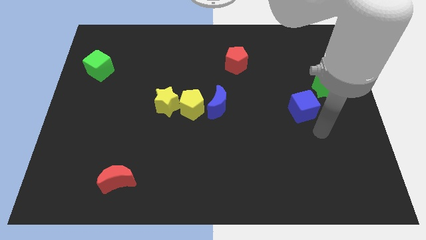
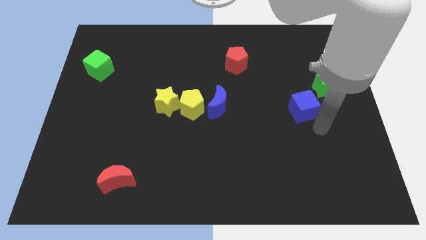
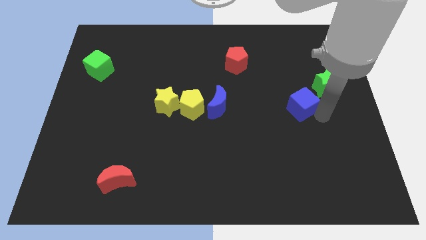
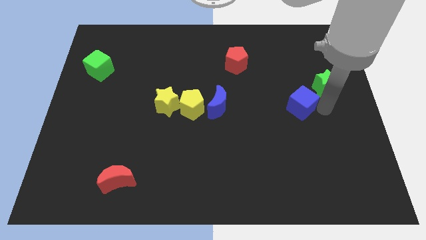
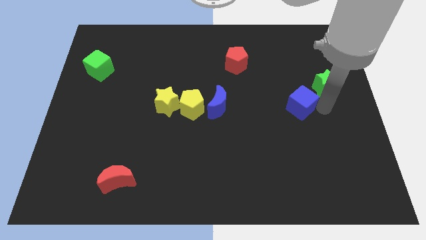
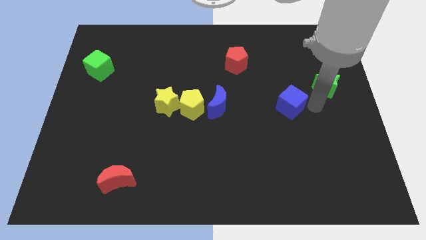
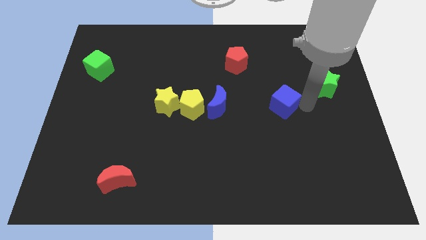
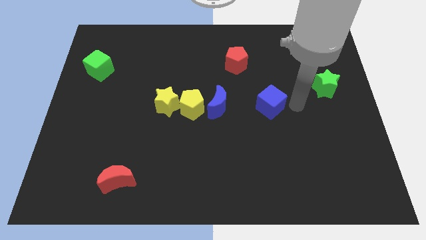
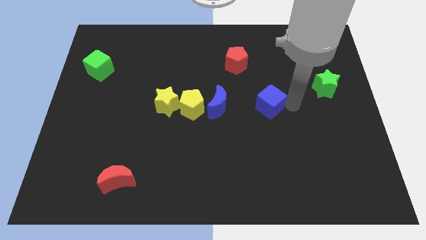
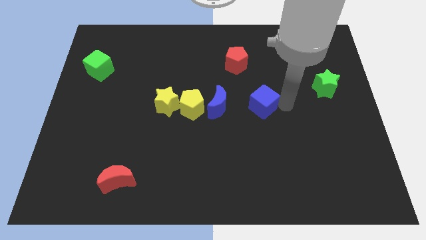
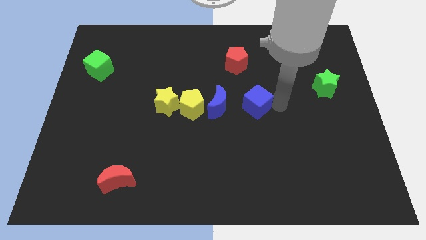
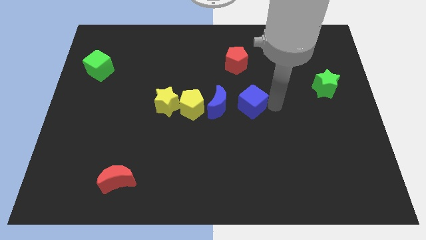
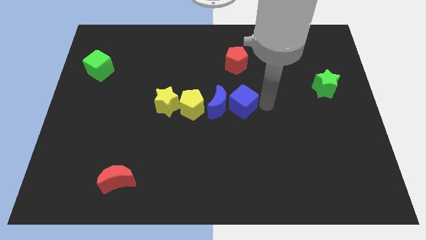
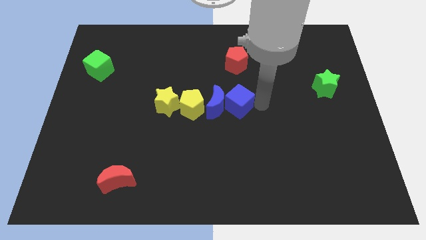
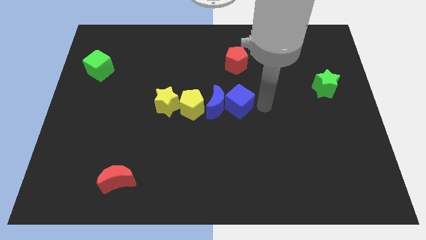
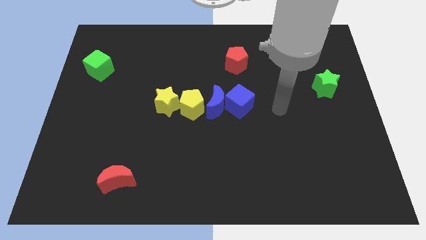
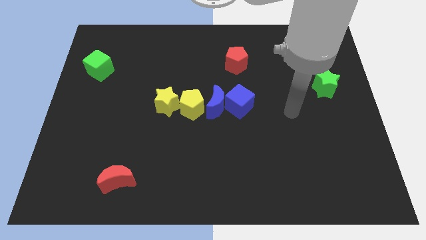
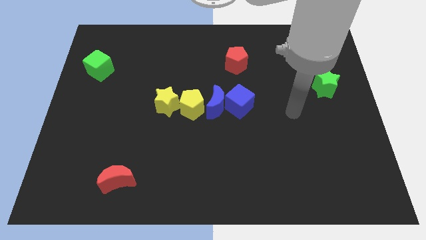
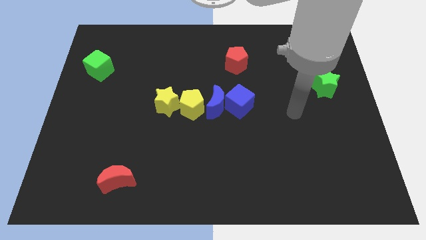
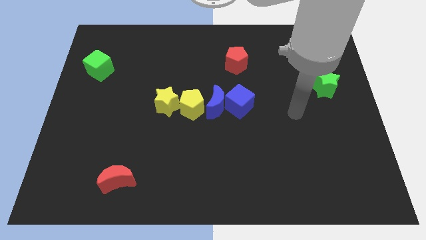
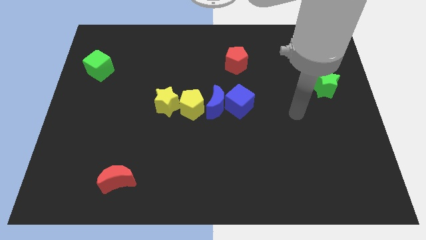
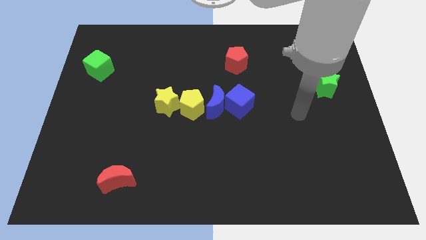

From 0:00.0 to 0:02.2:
push the blue cube into the blue crescent

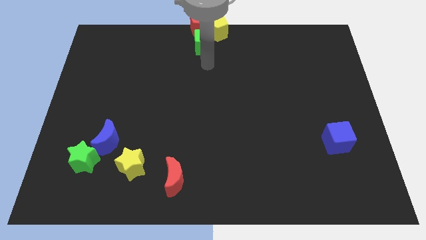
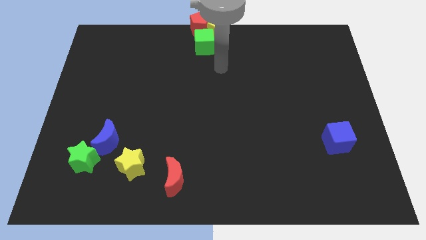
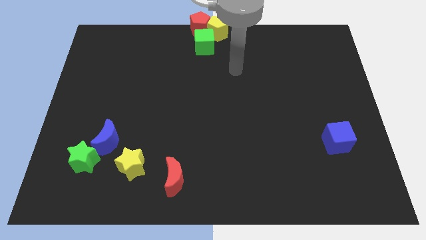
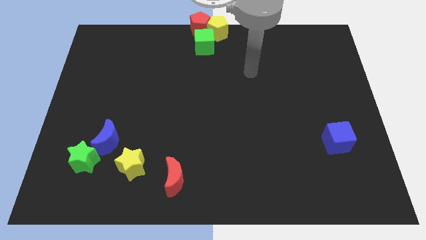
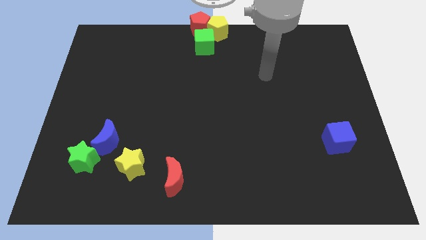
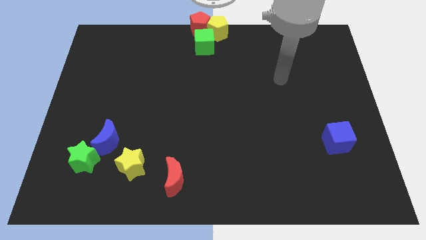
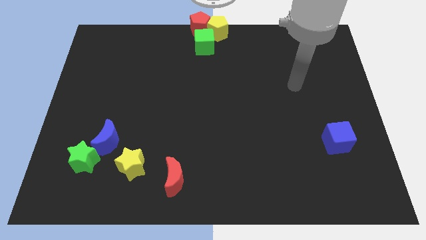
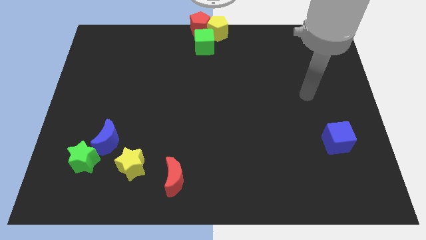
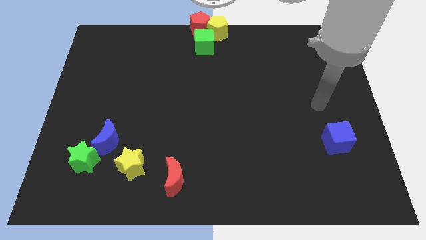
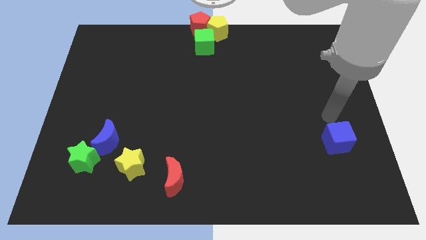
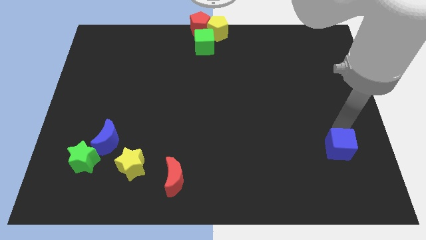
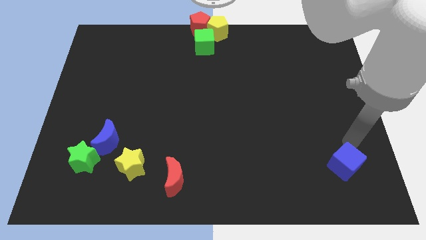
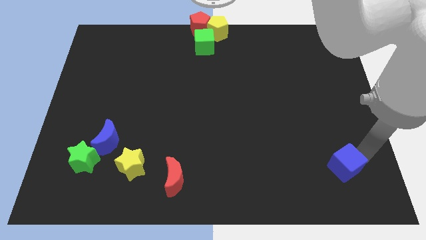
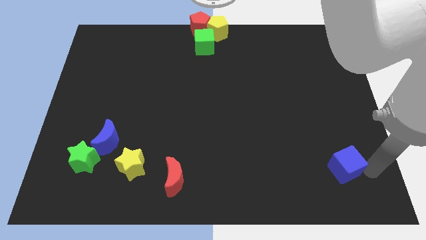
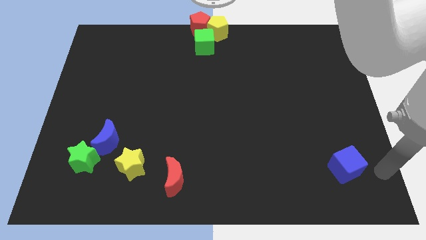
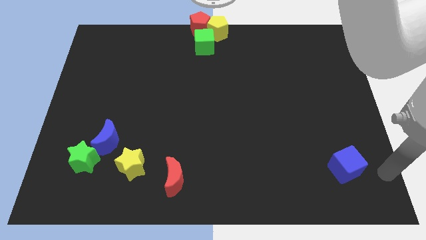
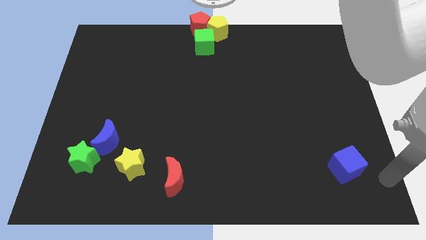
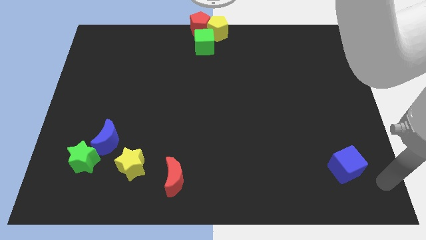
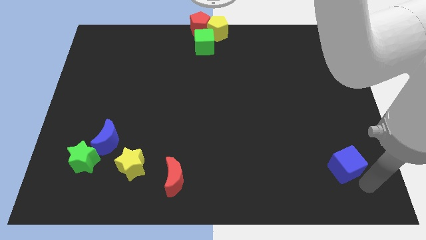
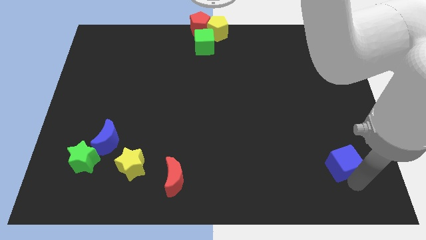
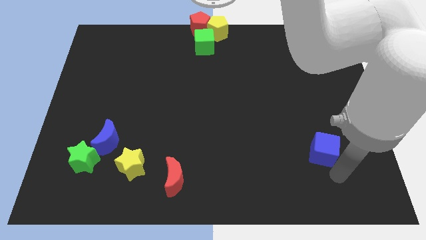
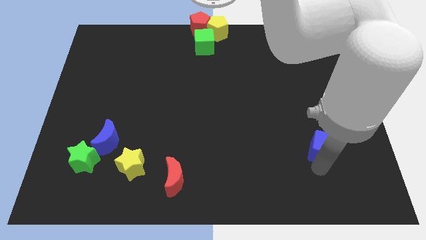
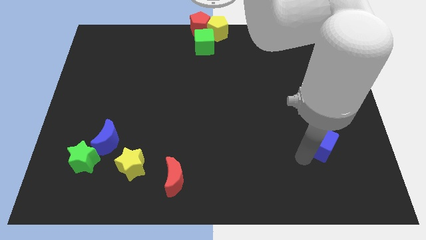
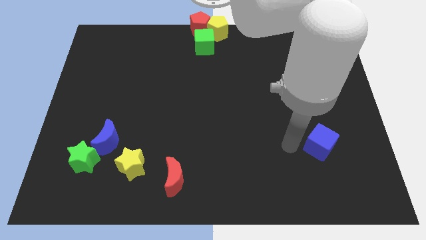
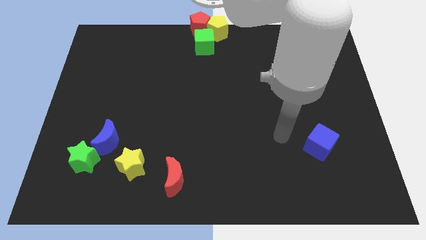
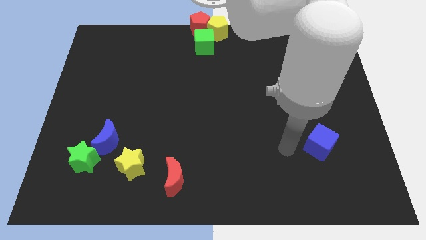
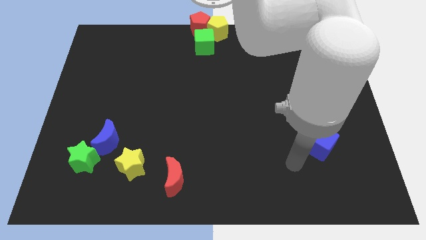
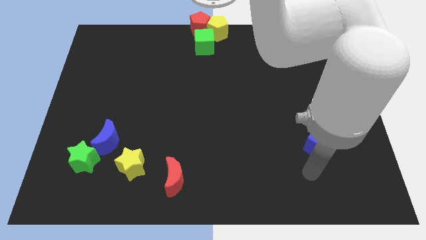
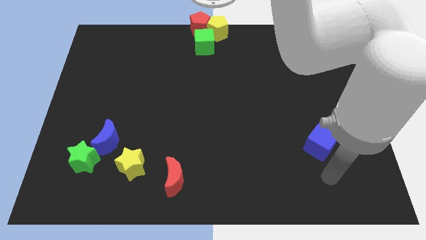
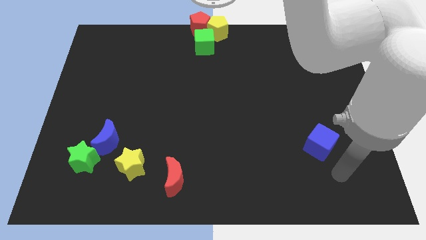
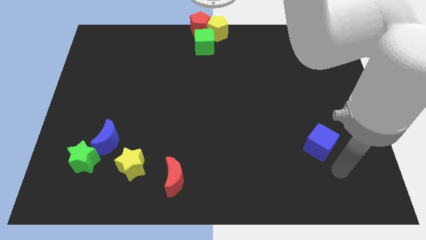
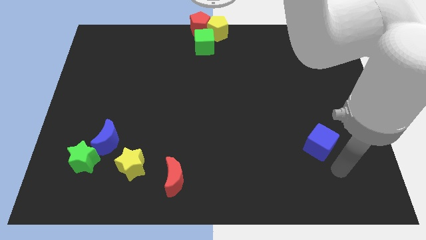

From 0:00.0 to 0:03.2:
move the blue cube horizontally to the right side of the blue moon

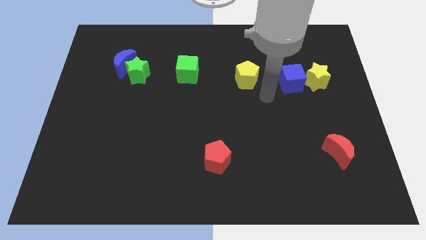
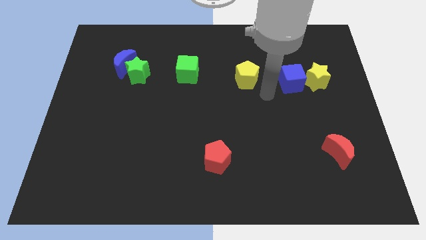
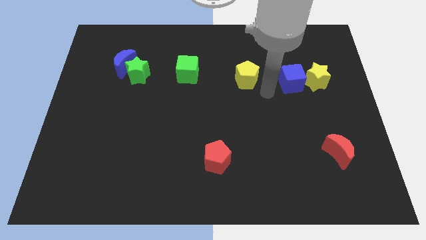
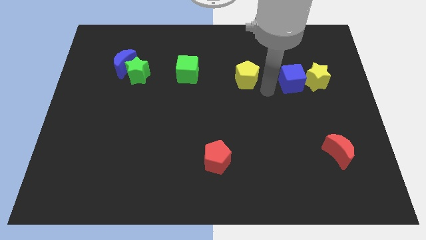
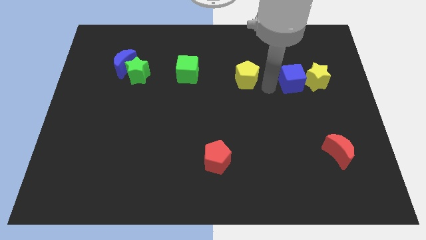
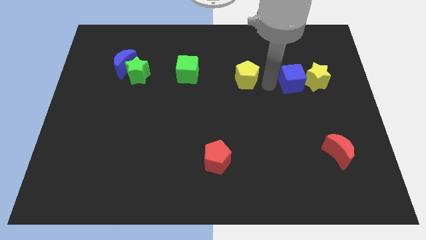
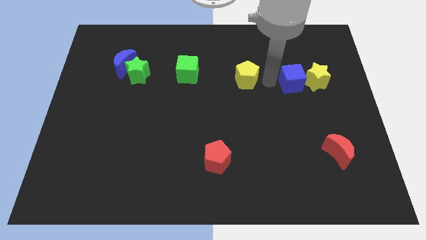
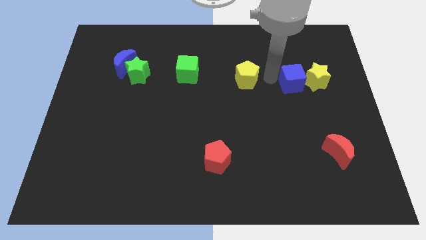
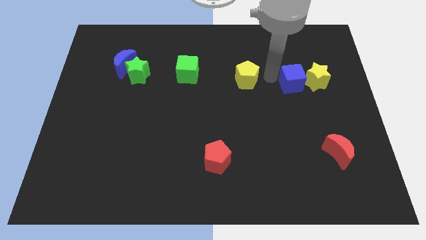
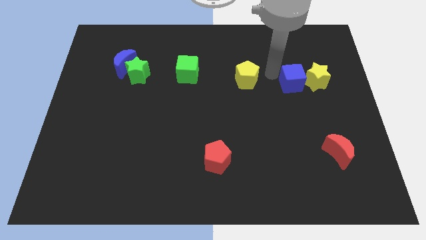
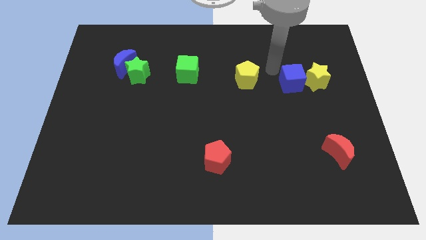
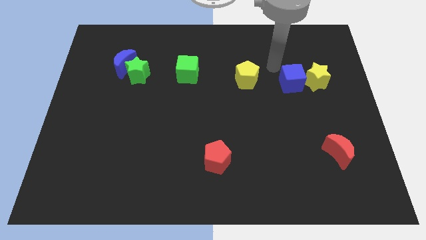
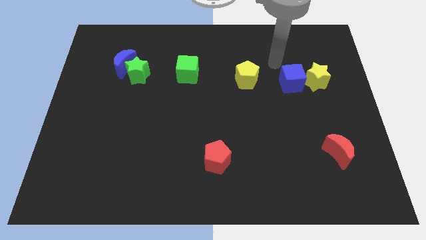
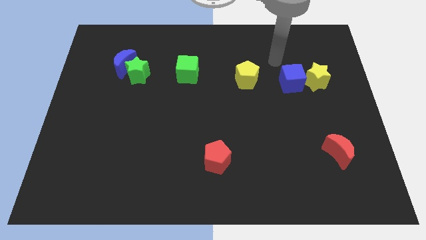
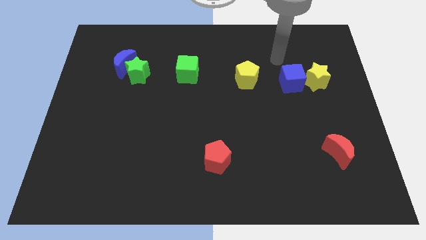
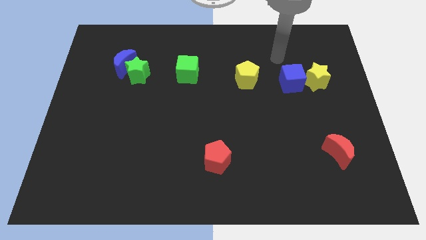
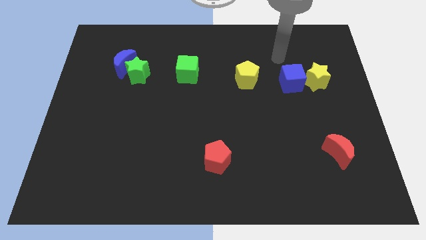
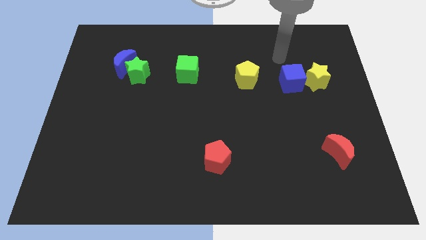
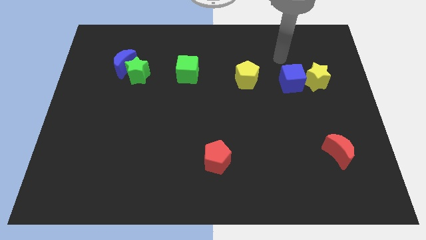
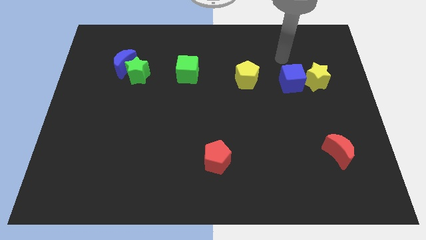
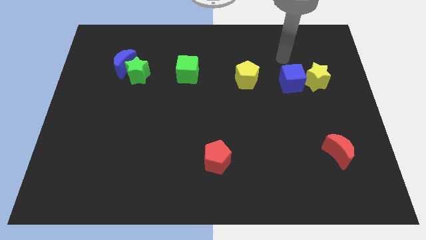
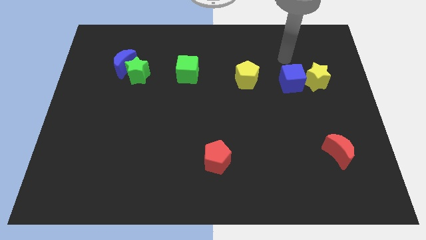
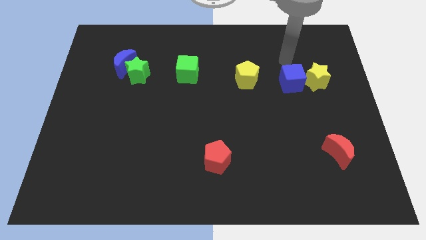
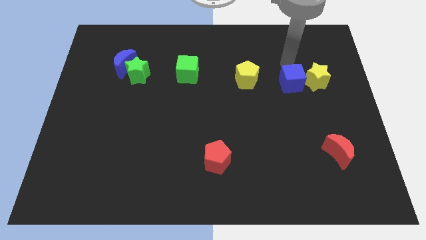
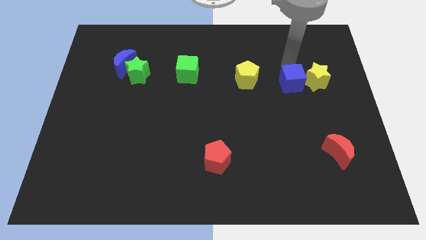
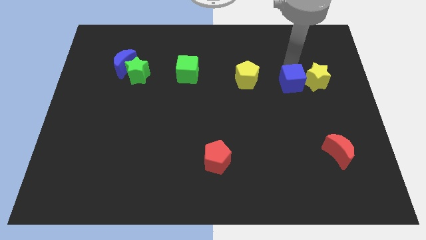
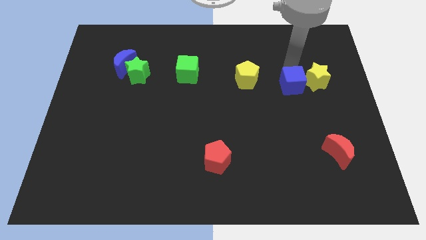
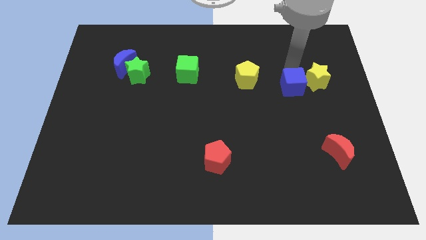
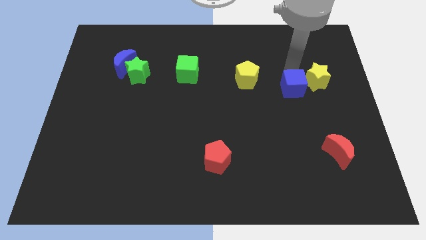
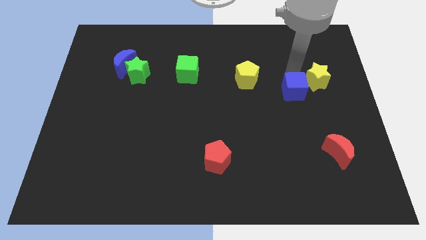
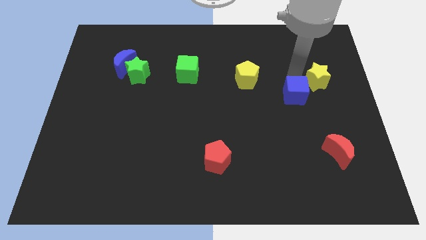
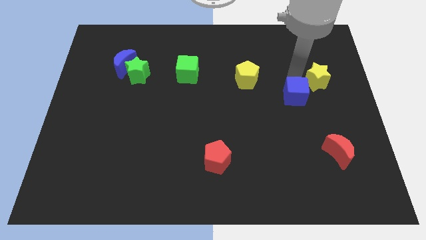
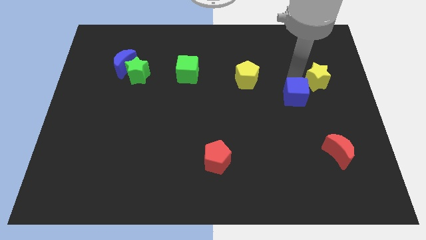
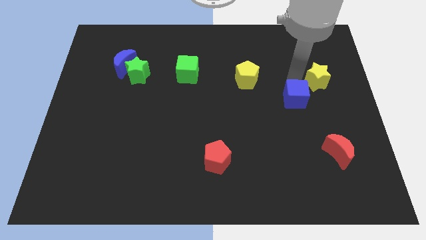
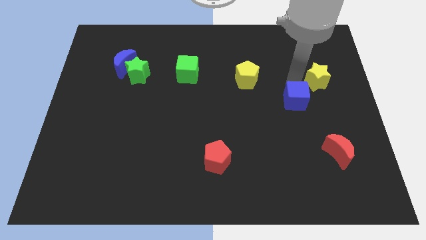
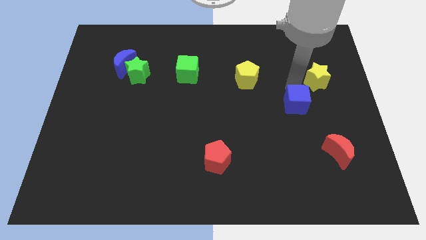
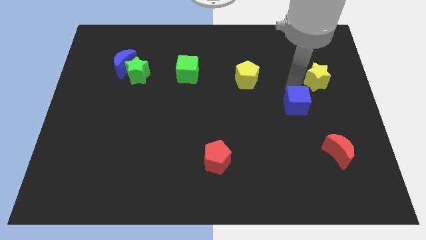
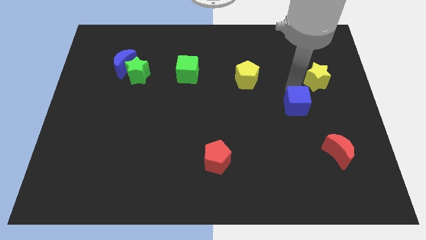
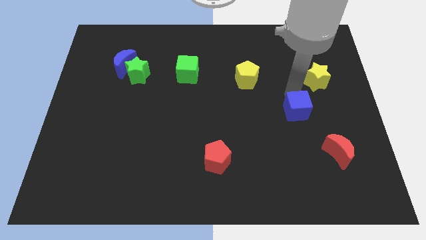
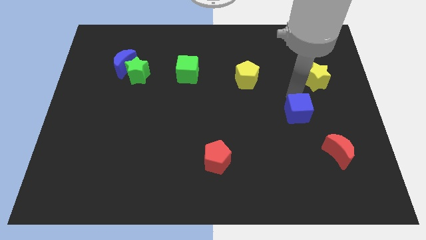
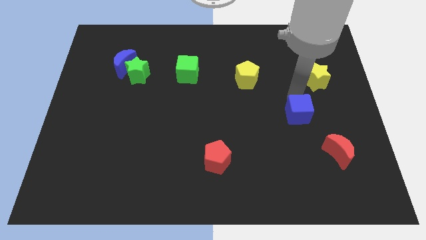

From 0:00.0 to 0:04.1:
separate blue cube from the yellow star
